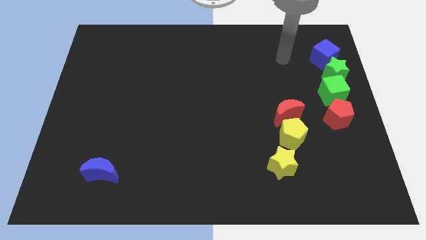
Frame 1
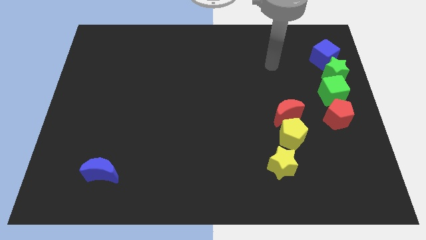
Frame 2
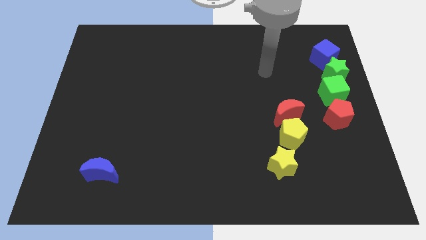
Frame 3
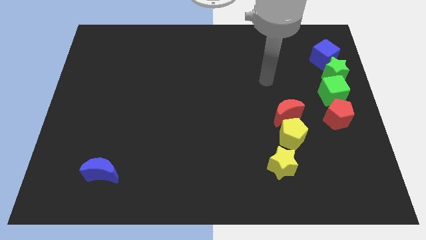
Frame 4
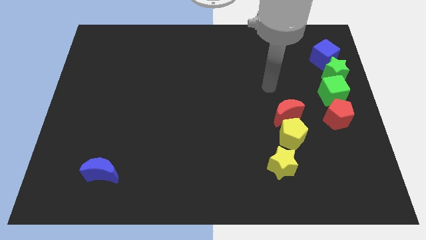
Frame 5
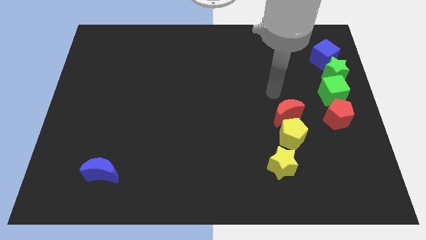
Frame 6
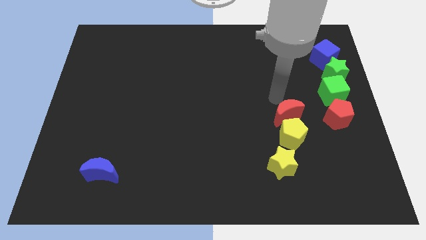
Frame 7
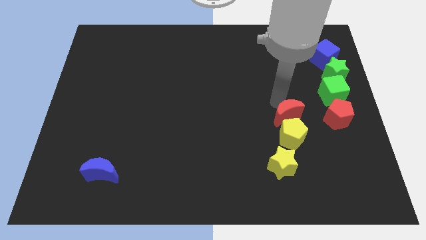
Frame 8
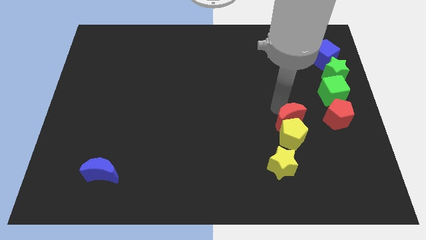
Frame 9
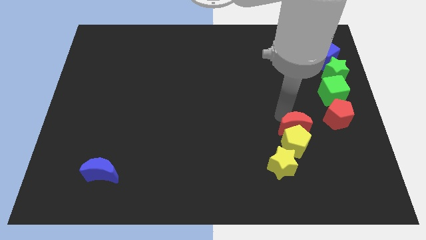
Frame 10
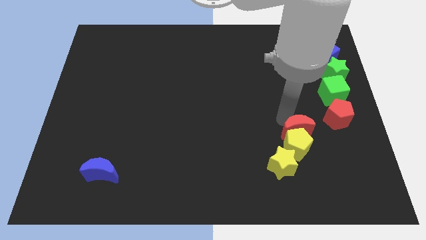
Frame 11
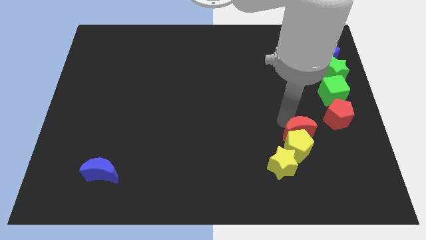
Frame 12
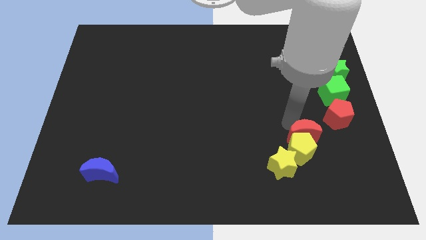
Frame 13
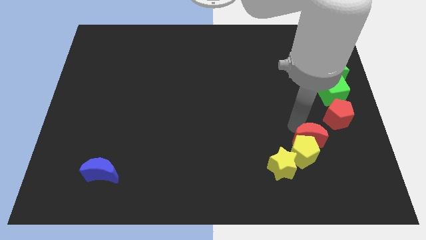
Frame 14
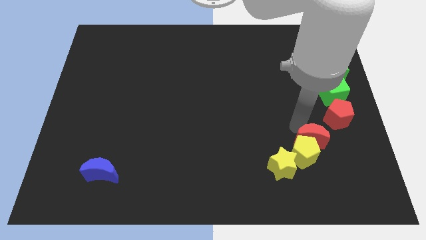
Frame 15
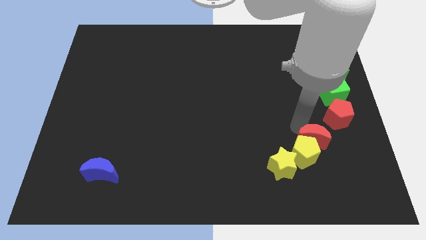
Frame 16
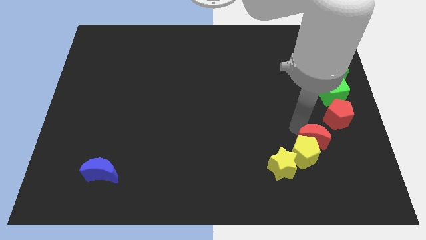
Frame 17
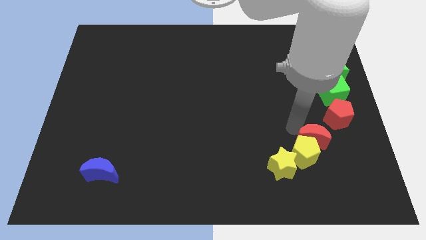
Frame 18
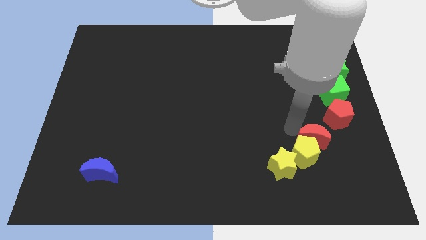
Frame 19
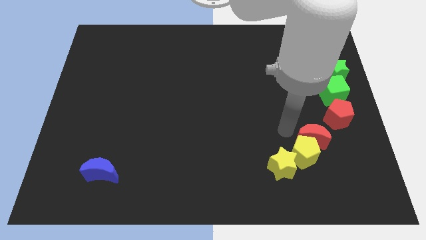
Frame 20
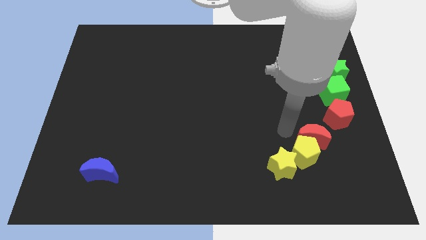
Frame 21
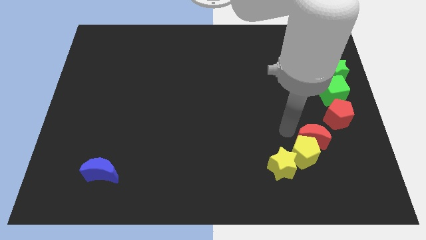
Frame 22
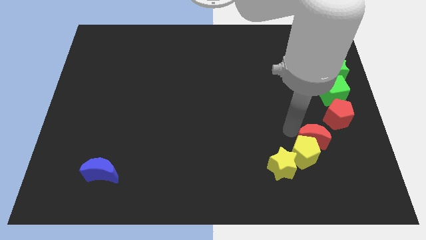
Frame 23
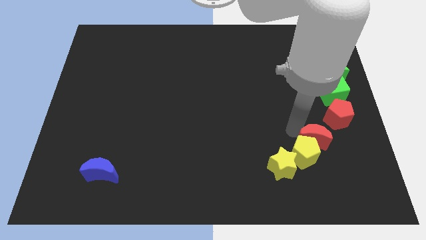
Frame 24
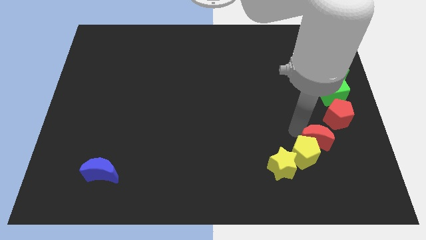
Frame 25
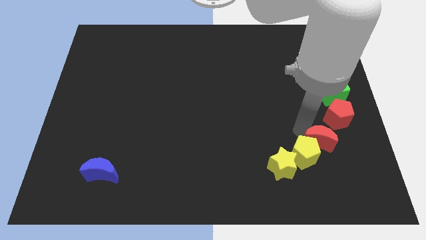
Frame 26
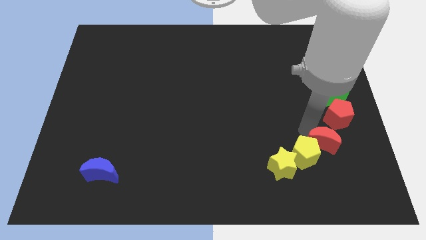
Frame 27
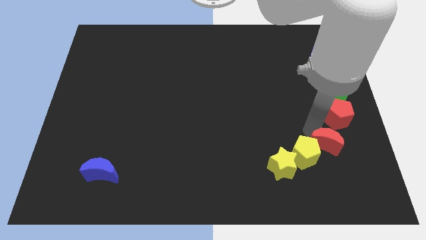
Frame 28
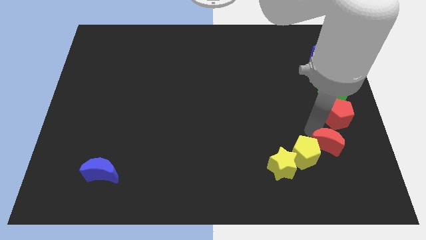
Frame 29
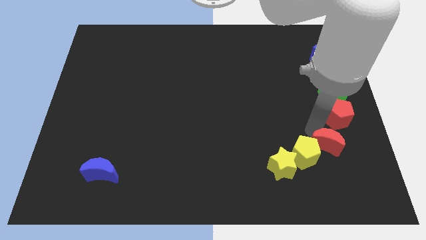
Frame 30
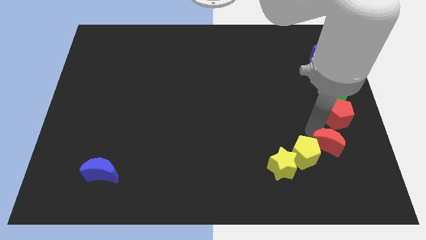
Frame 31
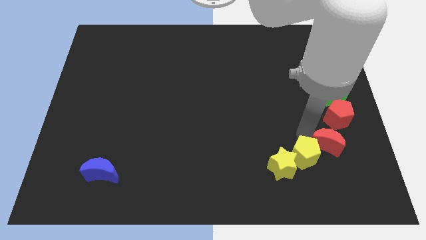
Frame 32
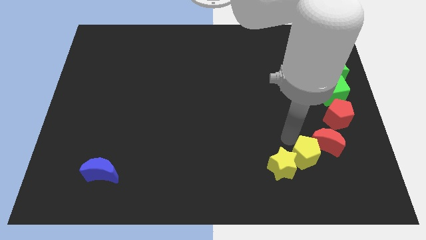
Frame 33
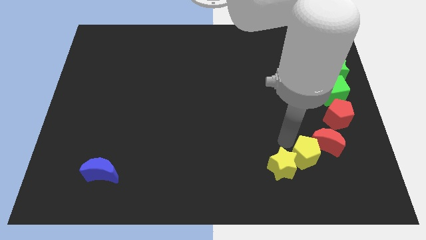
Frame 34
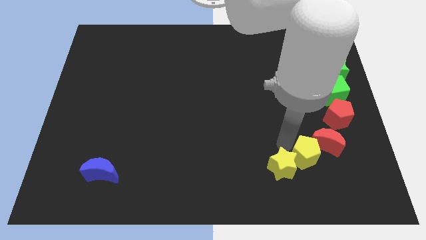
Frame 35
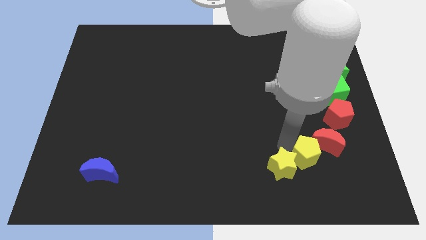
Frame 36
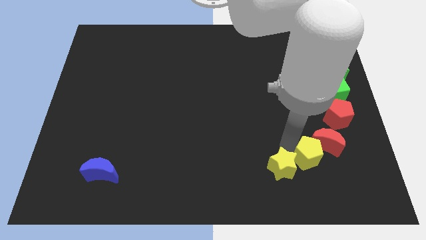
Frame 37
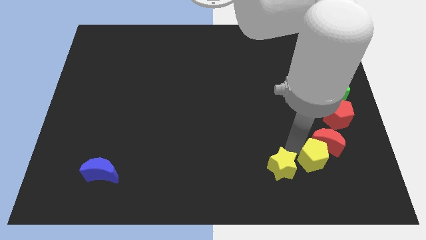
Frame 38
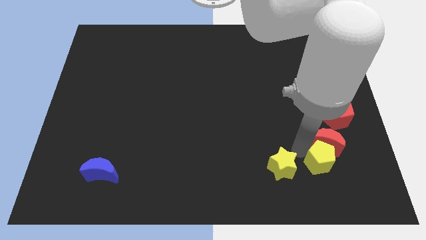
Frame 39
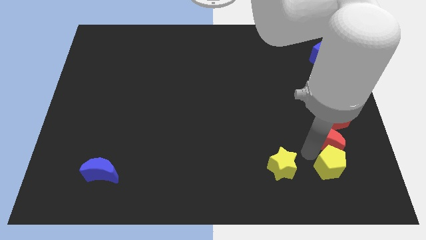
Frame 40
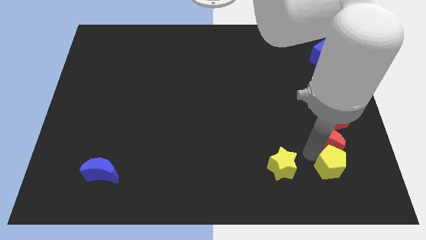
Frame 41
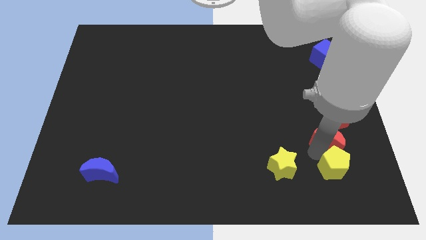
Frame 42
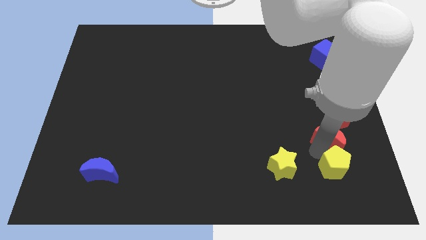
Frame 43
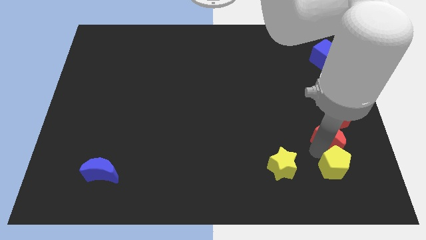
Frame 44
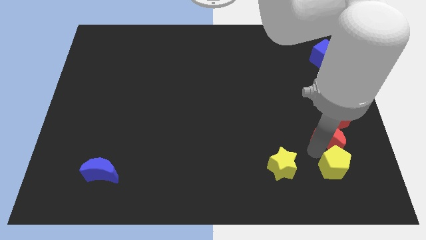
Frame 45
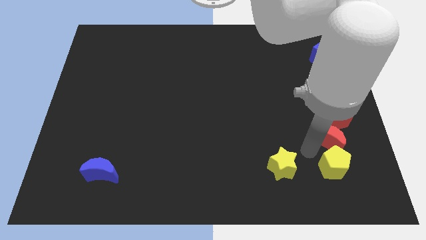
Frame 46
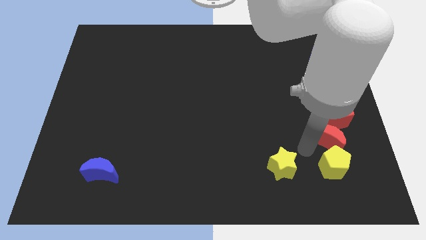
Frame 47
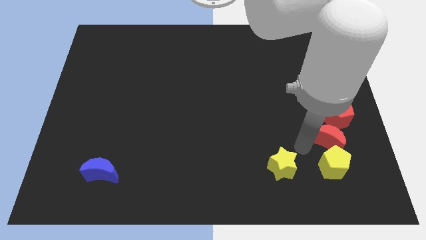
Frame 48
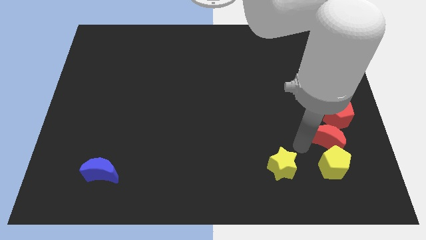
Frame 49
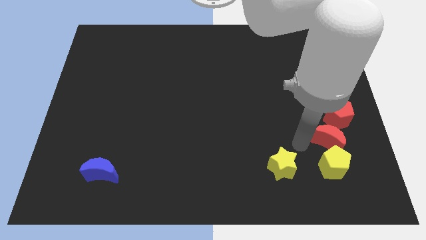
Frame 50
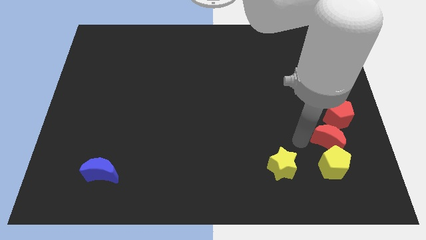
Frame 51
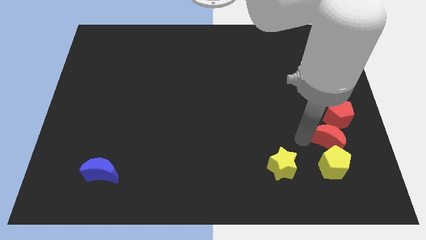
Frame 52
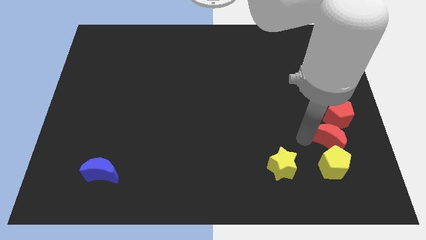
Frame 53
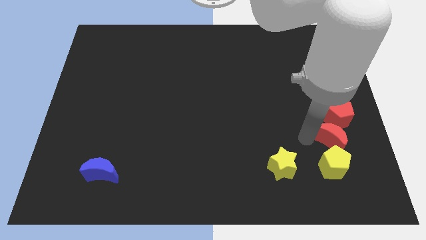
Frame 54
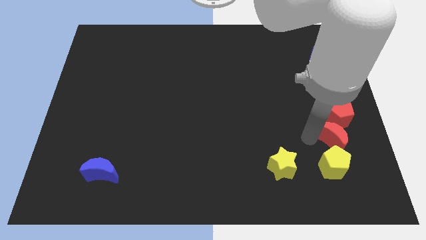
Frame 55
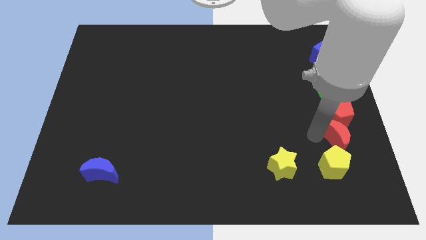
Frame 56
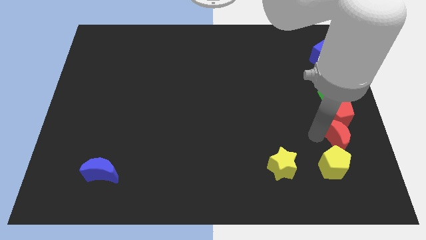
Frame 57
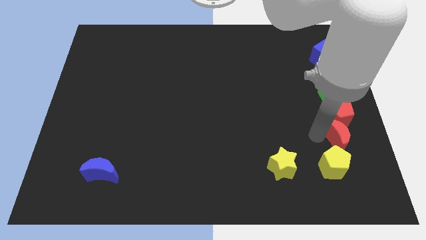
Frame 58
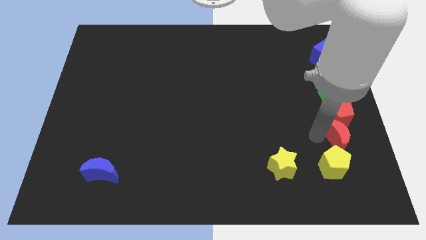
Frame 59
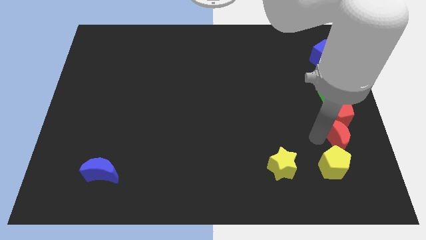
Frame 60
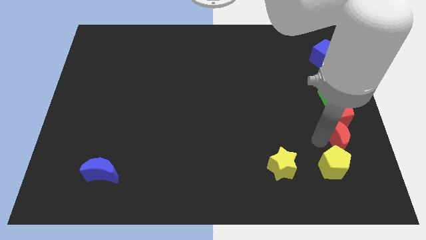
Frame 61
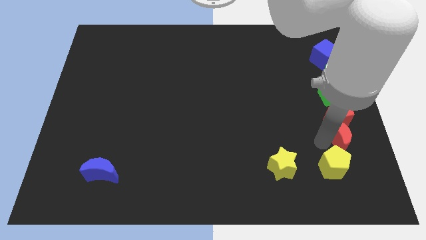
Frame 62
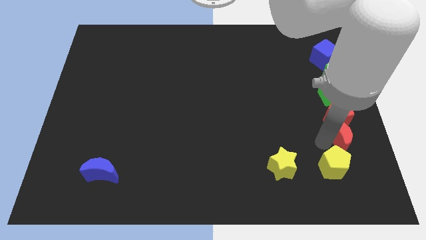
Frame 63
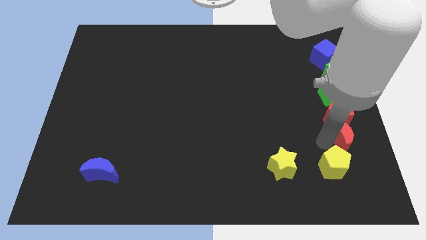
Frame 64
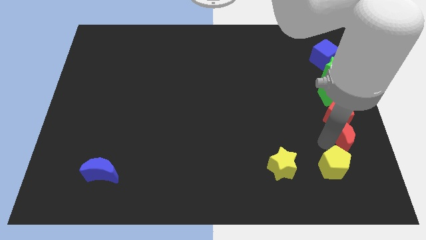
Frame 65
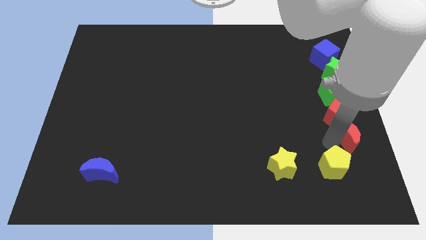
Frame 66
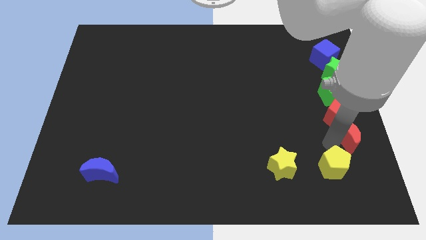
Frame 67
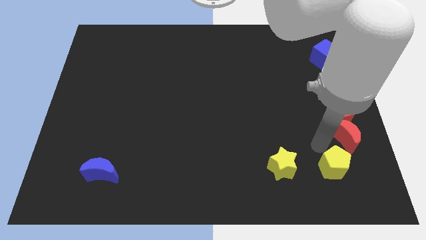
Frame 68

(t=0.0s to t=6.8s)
move the red crescent in between the pentagons

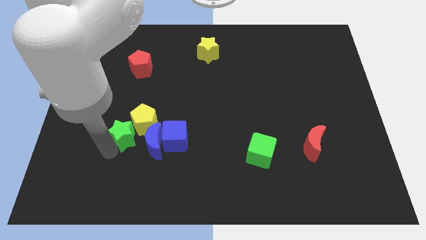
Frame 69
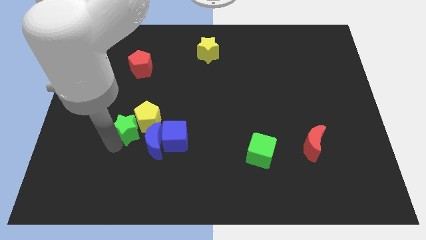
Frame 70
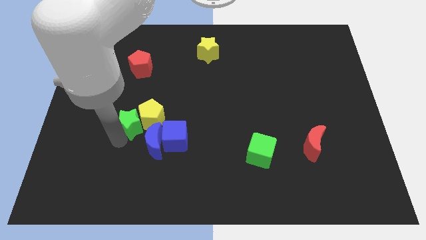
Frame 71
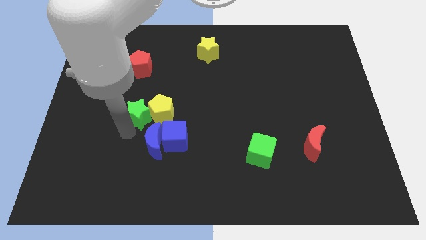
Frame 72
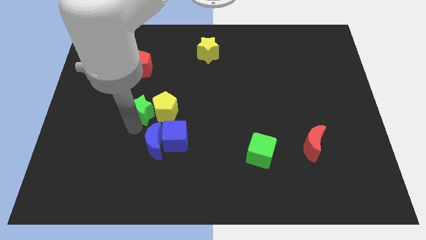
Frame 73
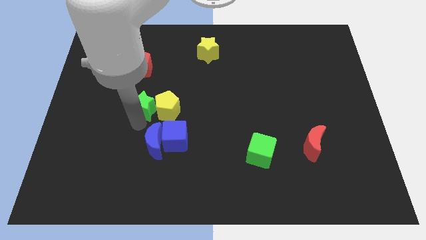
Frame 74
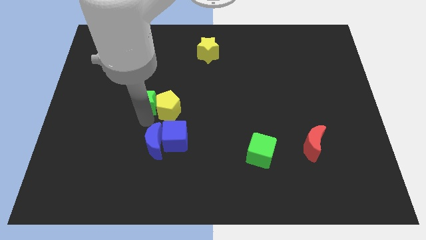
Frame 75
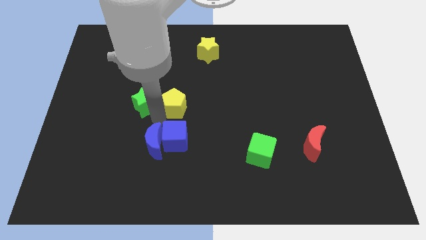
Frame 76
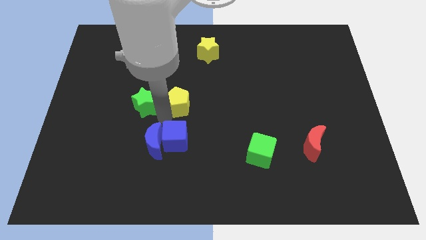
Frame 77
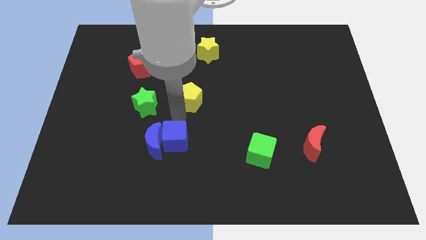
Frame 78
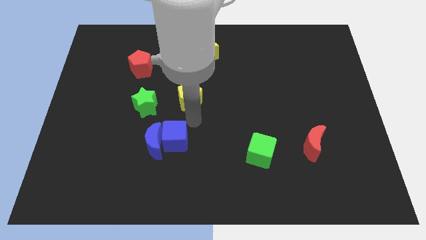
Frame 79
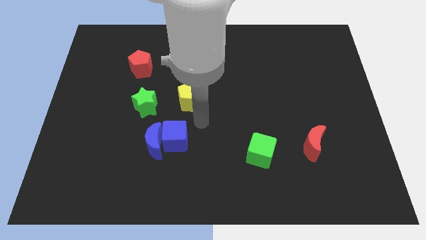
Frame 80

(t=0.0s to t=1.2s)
push the yellow pentagon away from the green star

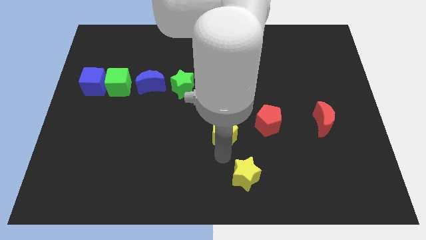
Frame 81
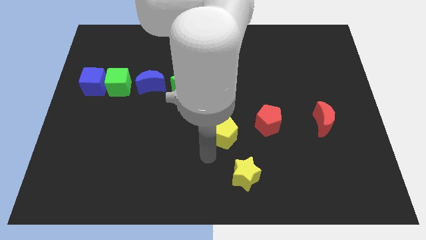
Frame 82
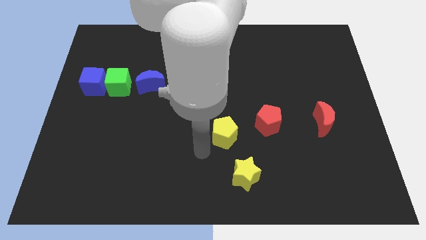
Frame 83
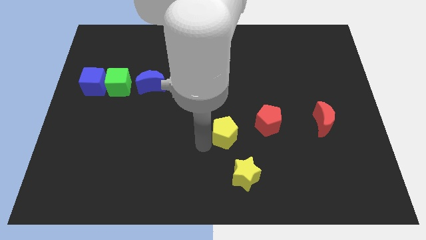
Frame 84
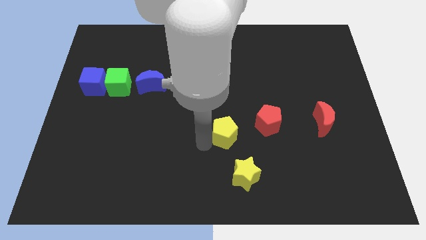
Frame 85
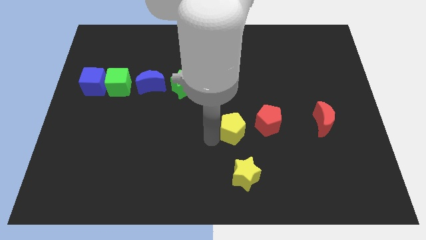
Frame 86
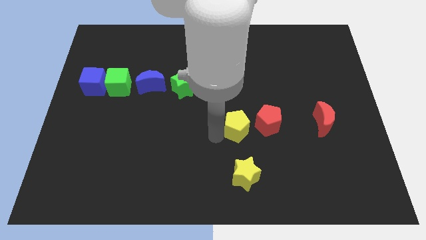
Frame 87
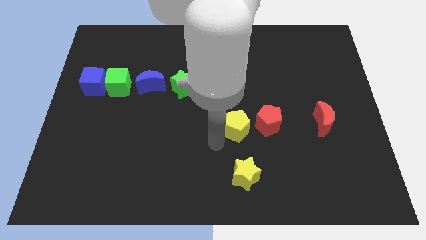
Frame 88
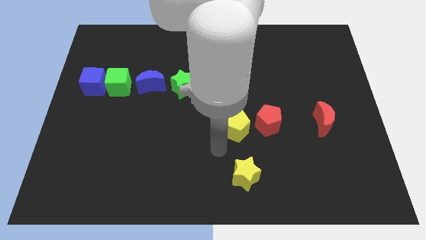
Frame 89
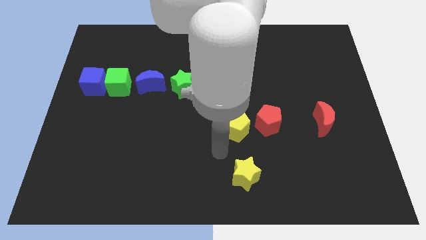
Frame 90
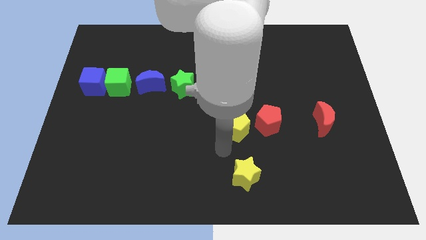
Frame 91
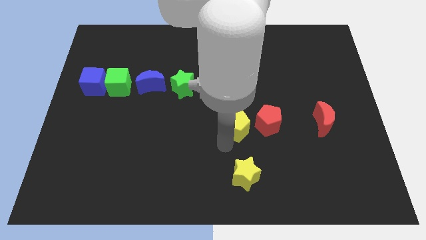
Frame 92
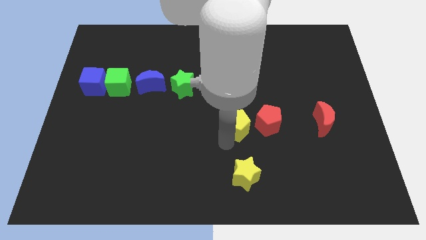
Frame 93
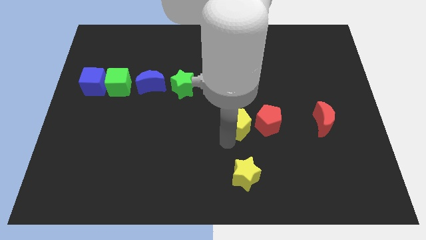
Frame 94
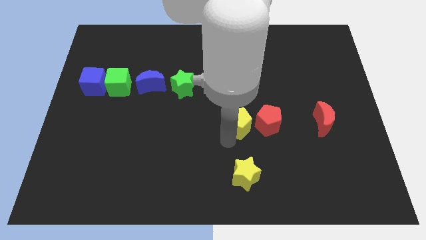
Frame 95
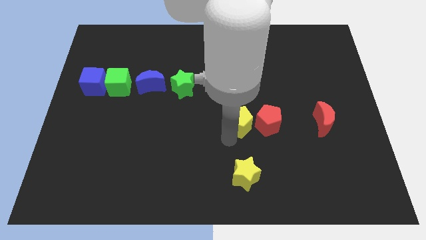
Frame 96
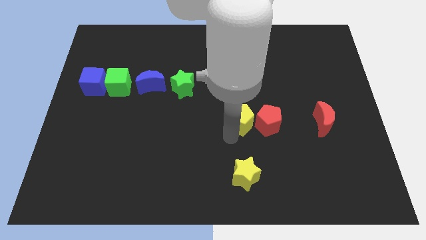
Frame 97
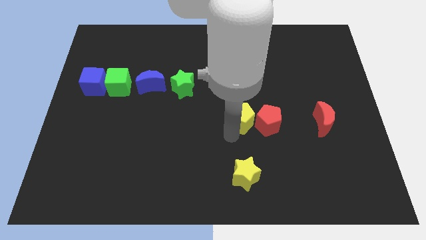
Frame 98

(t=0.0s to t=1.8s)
push the yellow pentagon to the left of the red pentagon
